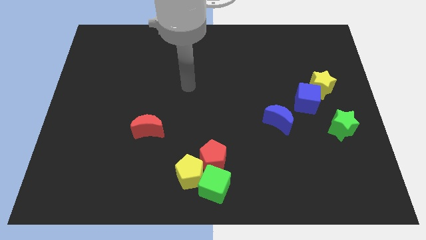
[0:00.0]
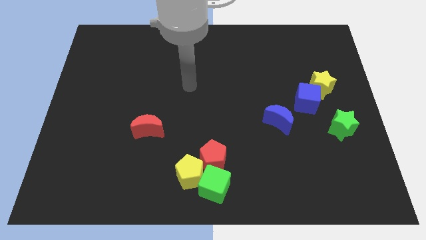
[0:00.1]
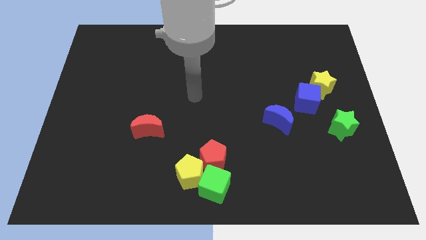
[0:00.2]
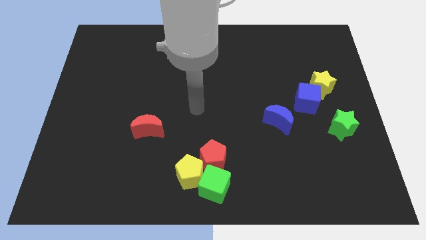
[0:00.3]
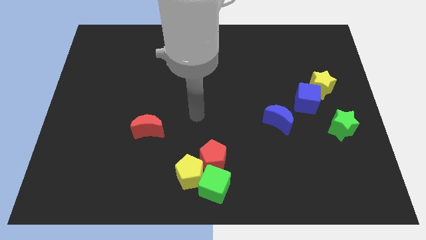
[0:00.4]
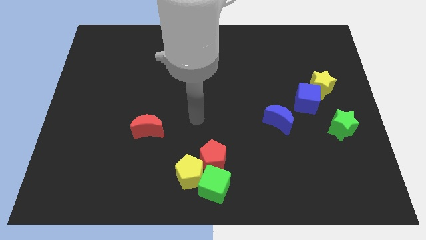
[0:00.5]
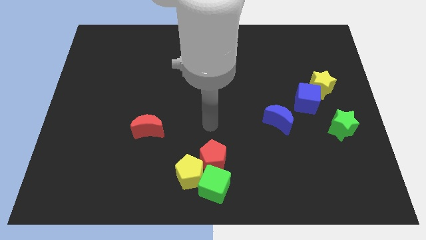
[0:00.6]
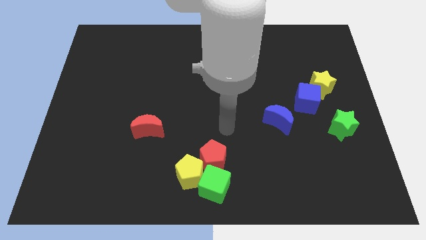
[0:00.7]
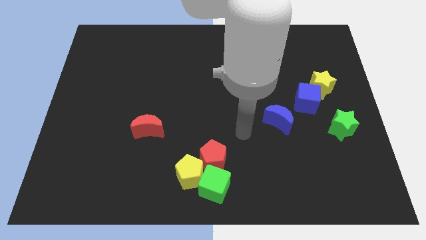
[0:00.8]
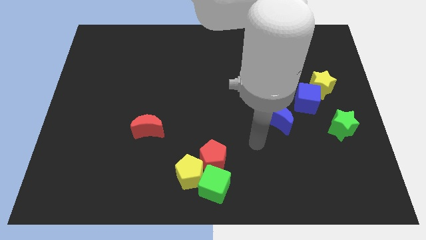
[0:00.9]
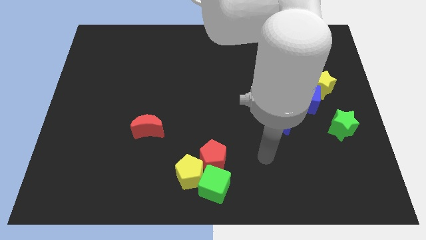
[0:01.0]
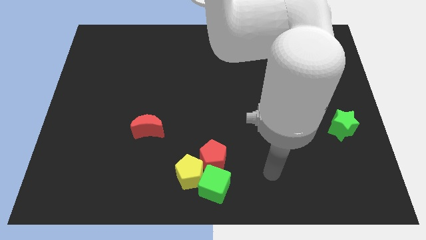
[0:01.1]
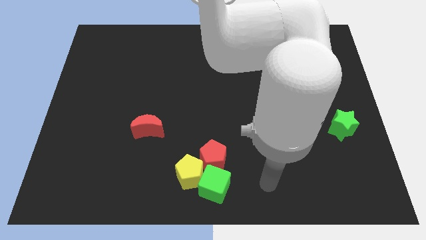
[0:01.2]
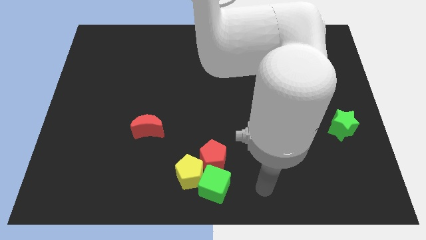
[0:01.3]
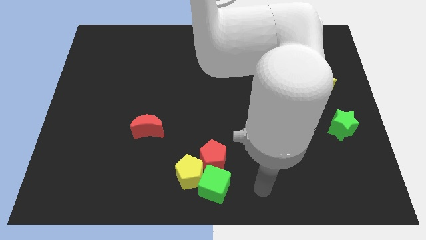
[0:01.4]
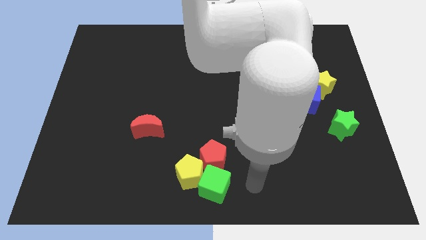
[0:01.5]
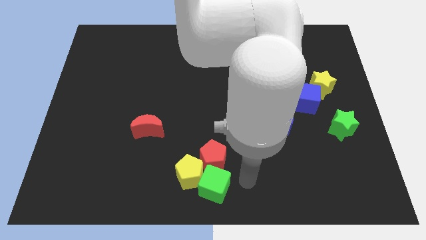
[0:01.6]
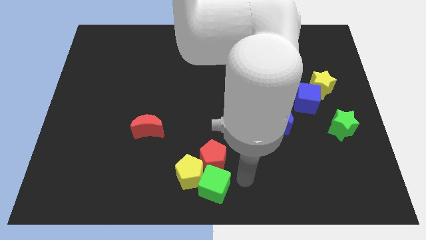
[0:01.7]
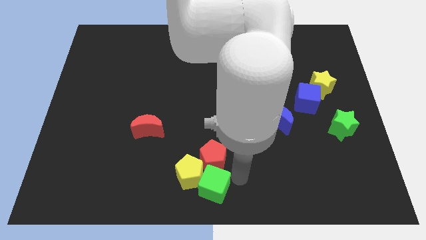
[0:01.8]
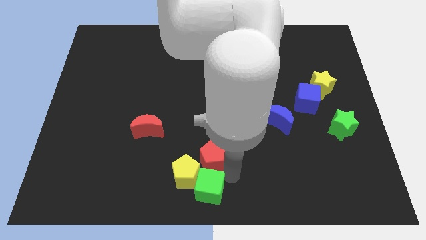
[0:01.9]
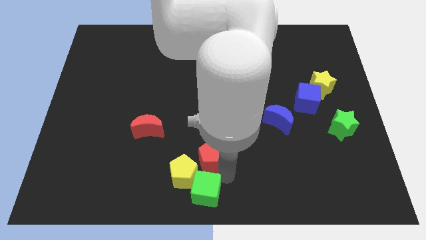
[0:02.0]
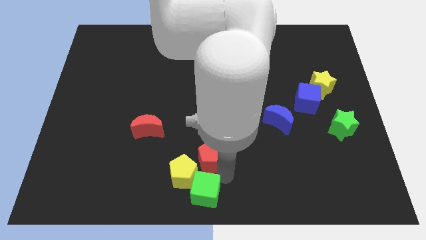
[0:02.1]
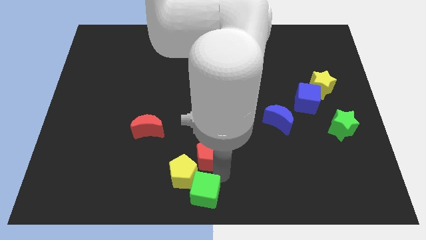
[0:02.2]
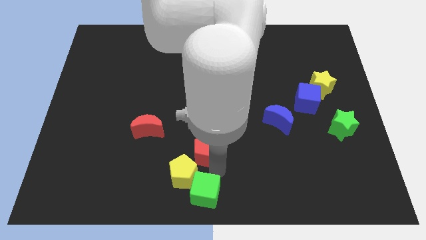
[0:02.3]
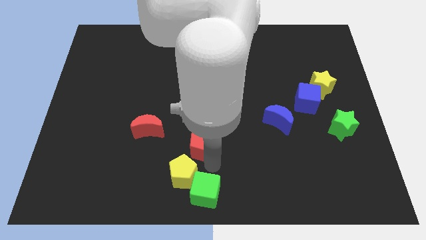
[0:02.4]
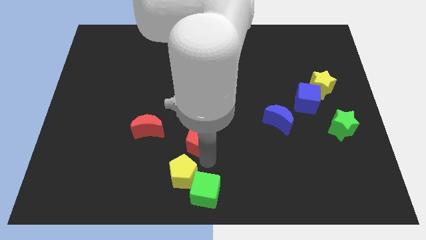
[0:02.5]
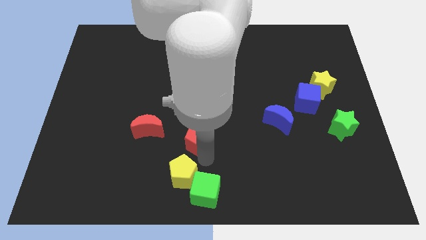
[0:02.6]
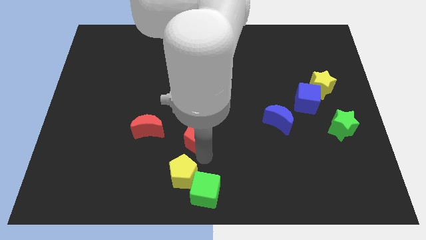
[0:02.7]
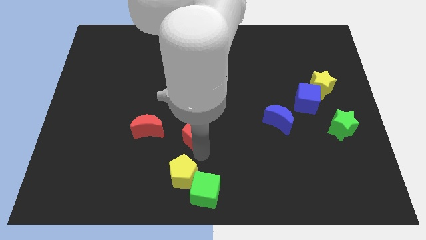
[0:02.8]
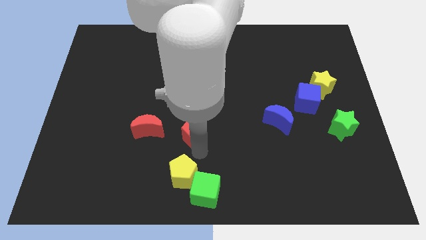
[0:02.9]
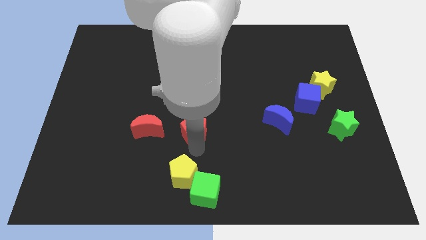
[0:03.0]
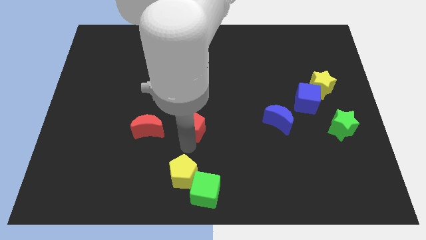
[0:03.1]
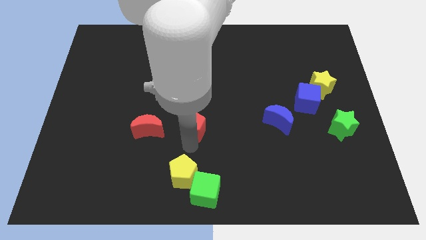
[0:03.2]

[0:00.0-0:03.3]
push the red pentagon to the right of the red crescent

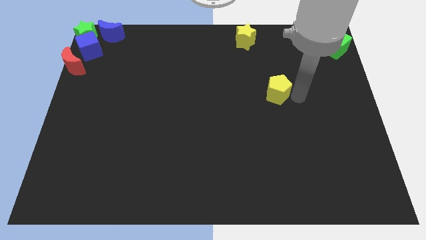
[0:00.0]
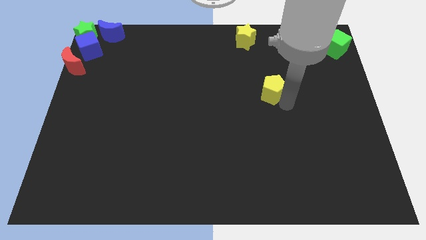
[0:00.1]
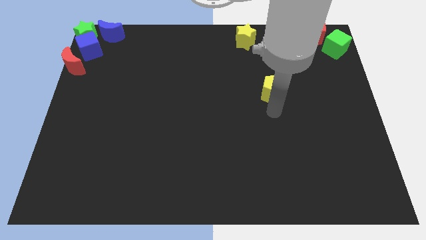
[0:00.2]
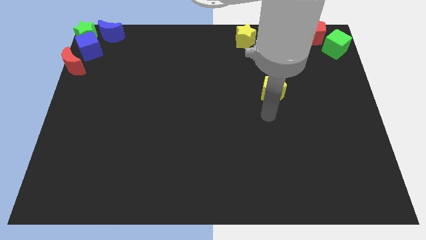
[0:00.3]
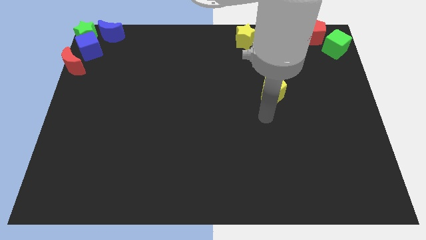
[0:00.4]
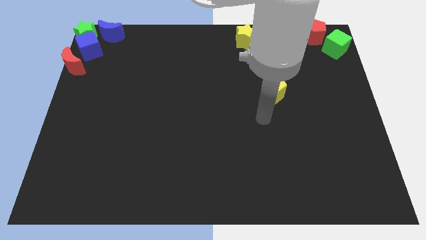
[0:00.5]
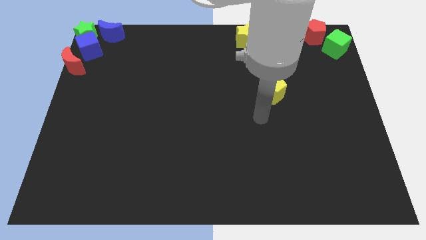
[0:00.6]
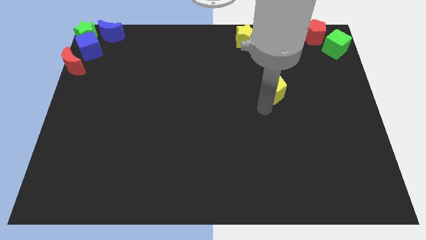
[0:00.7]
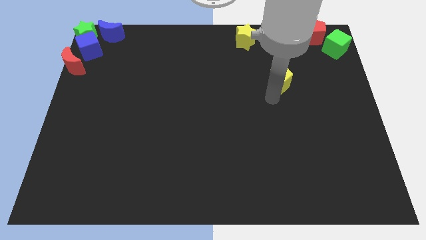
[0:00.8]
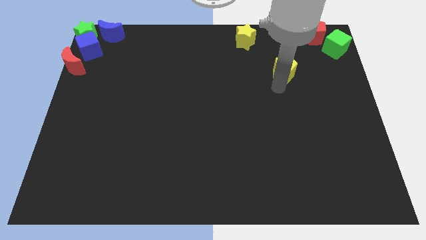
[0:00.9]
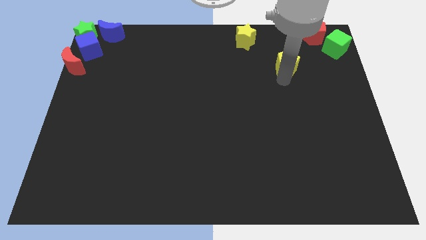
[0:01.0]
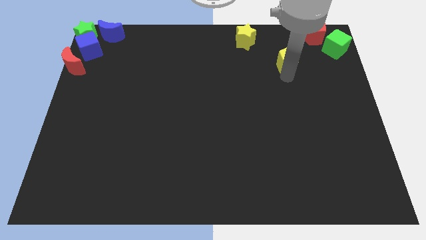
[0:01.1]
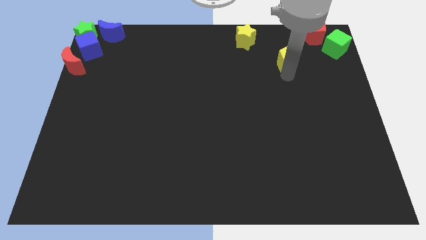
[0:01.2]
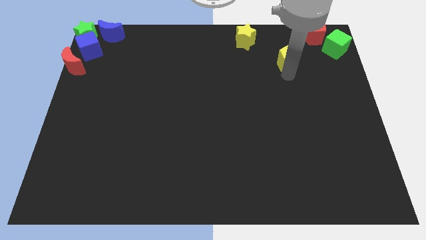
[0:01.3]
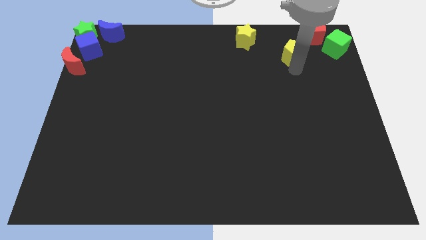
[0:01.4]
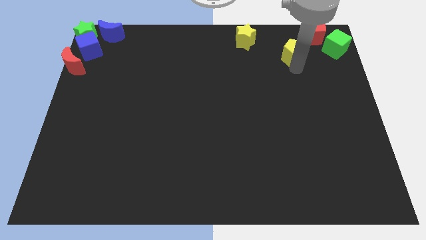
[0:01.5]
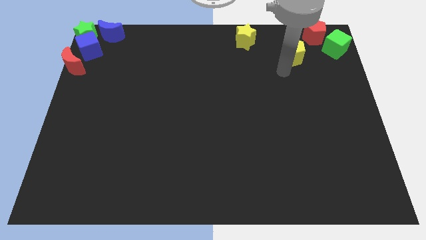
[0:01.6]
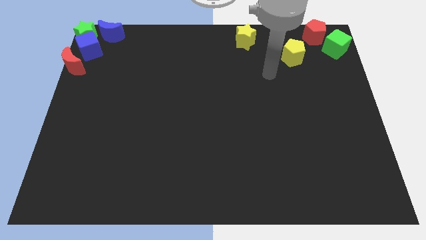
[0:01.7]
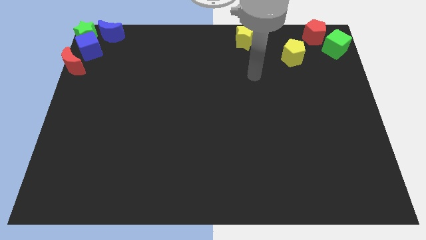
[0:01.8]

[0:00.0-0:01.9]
move the yellow pentagon near to the red pentagon

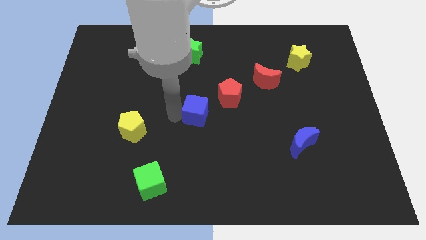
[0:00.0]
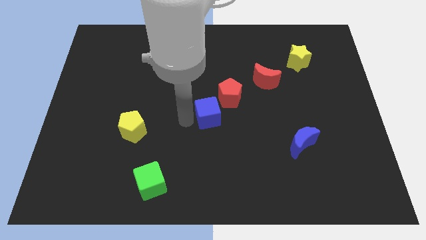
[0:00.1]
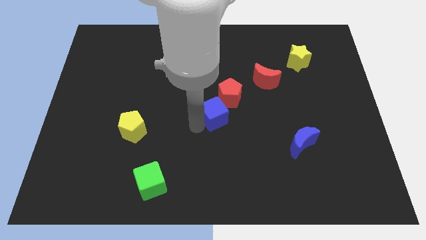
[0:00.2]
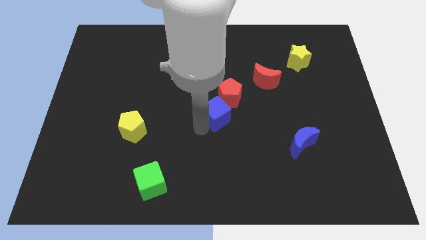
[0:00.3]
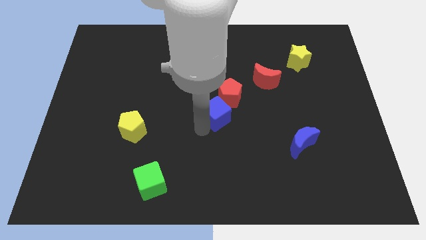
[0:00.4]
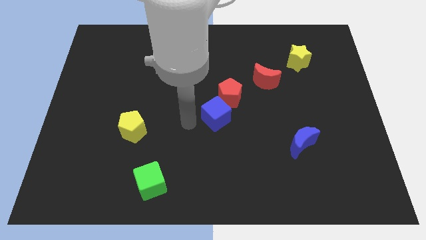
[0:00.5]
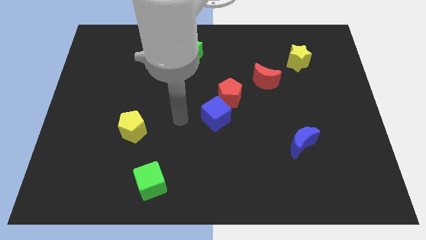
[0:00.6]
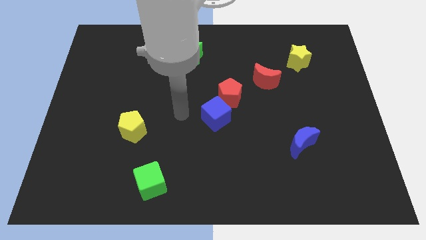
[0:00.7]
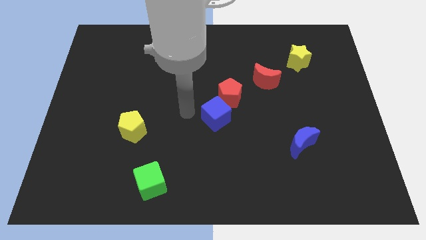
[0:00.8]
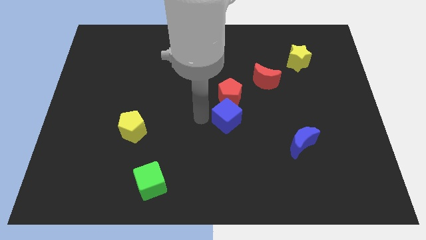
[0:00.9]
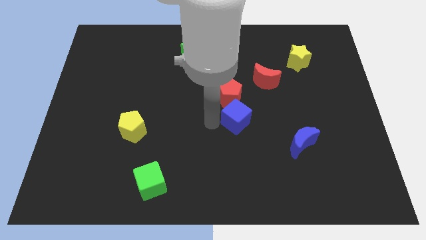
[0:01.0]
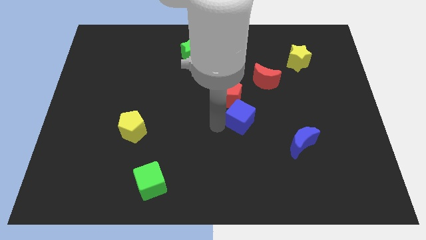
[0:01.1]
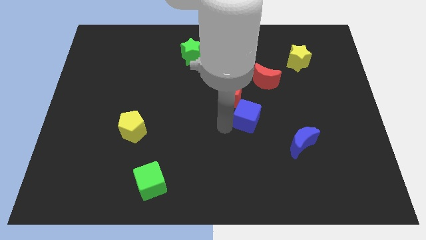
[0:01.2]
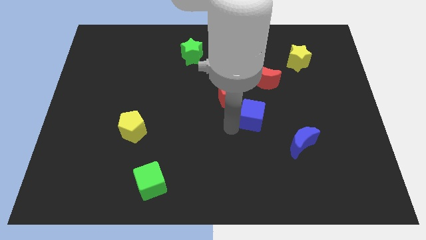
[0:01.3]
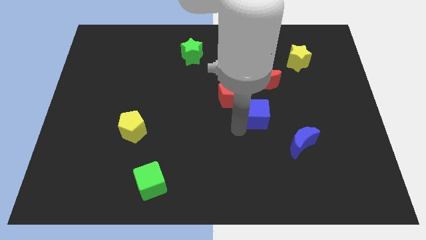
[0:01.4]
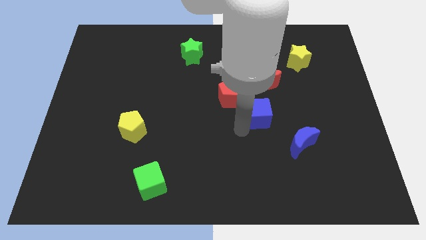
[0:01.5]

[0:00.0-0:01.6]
move the blue cube diagonally top left to the blue crescent

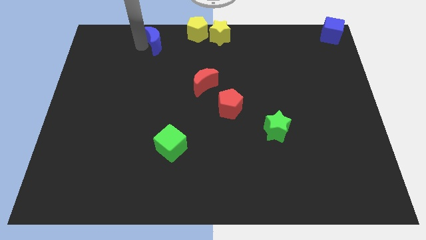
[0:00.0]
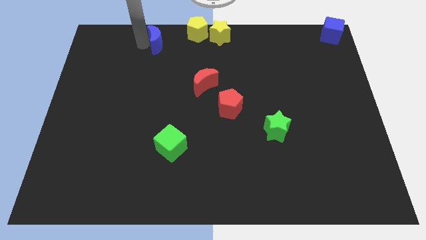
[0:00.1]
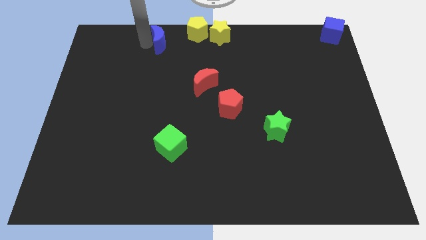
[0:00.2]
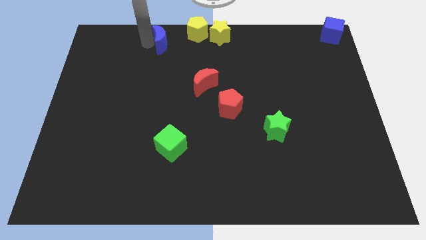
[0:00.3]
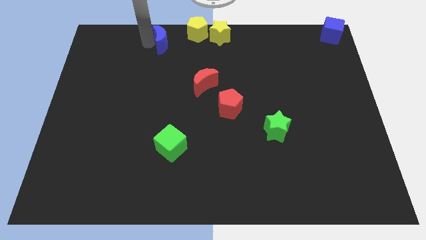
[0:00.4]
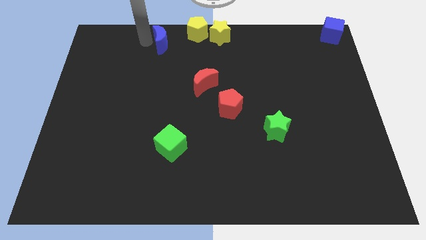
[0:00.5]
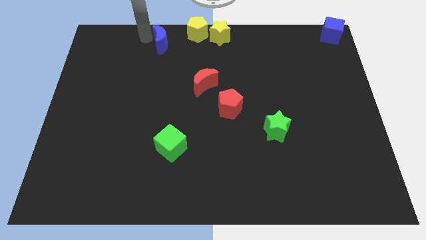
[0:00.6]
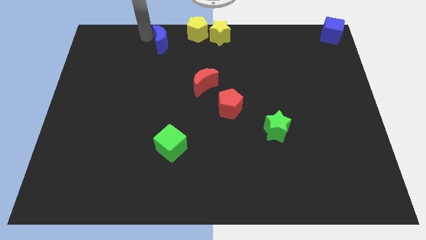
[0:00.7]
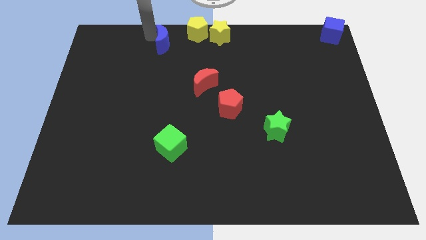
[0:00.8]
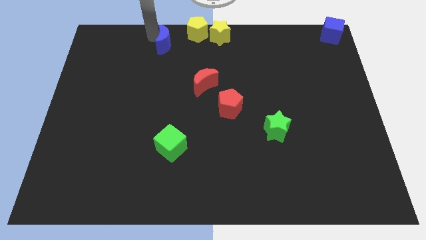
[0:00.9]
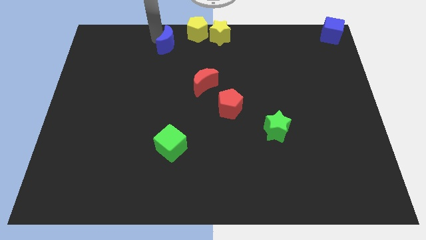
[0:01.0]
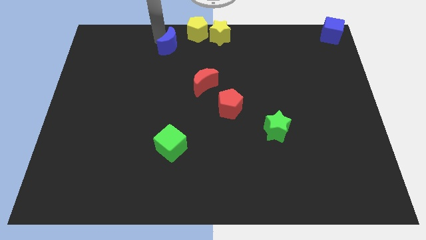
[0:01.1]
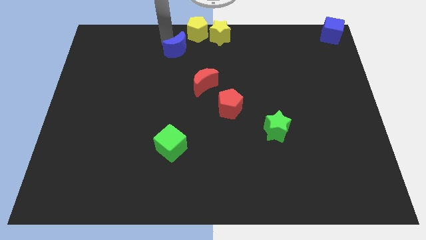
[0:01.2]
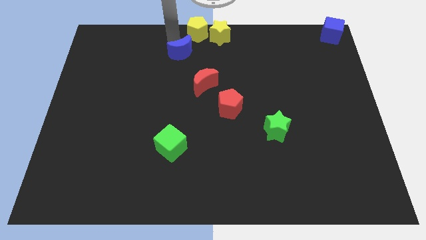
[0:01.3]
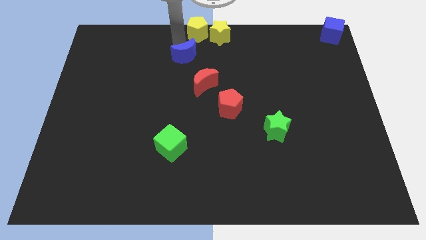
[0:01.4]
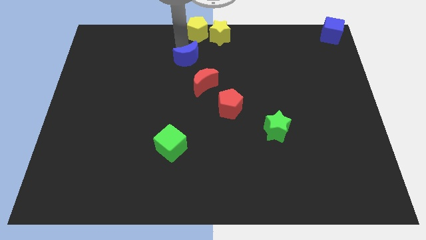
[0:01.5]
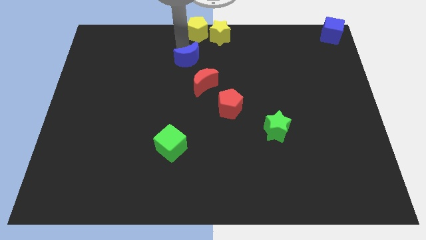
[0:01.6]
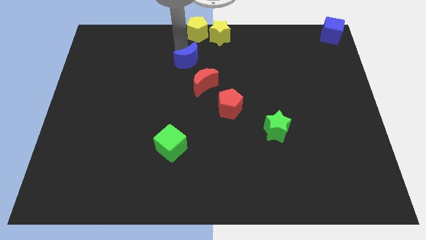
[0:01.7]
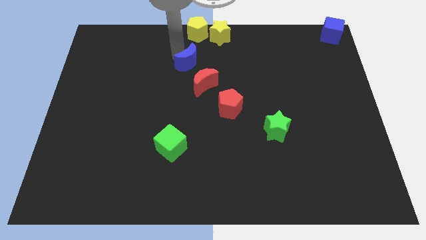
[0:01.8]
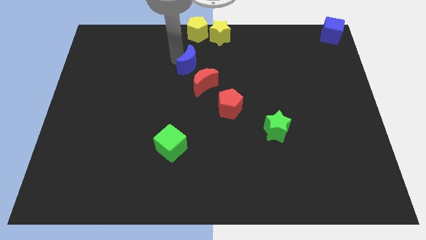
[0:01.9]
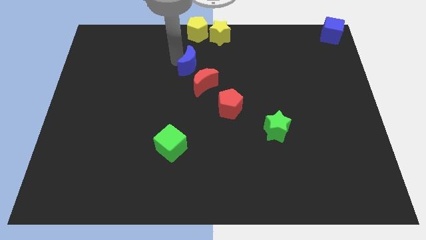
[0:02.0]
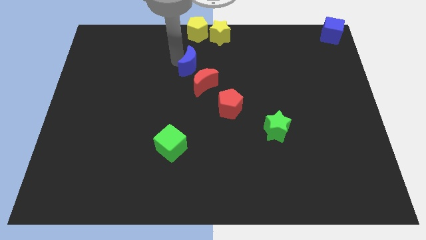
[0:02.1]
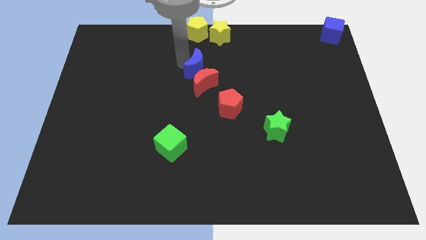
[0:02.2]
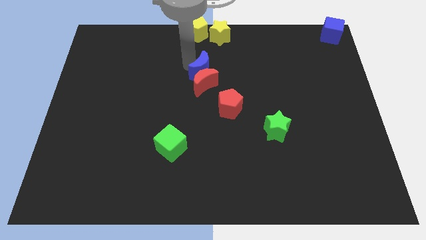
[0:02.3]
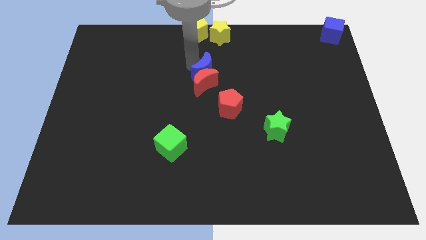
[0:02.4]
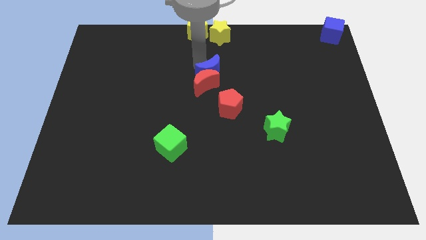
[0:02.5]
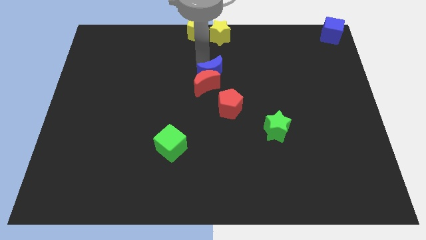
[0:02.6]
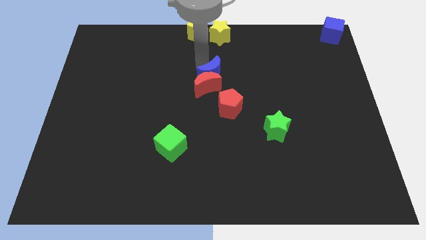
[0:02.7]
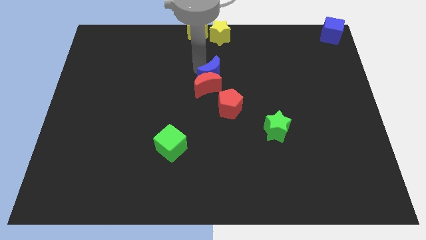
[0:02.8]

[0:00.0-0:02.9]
place blue moon to the top of red moon
